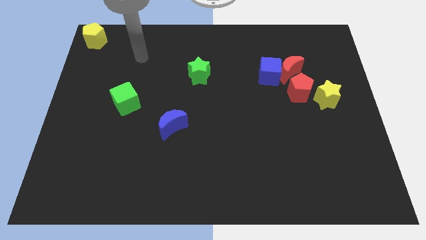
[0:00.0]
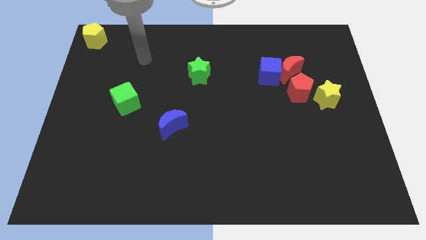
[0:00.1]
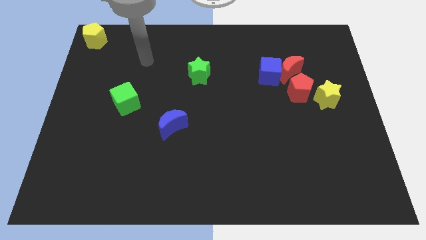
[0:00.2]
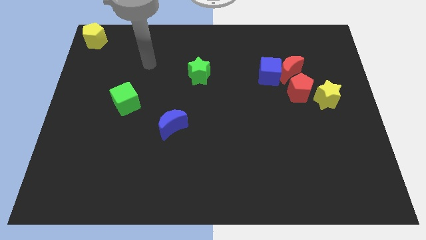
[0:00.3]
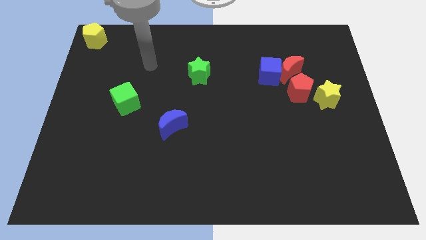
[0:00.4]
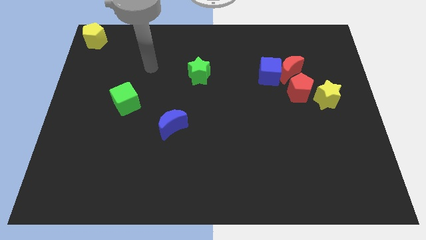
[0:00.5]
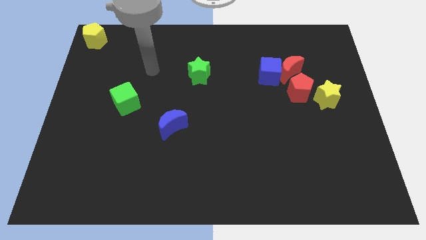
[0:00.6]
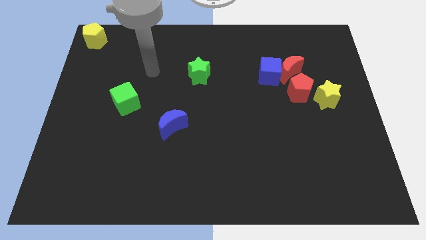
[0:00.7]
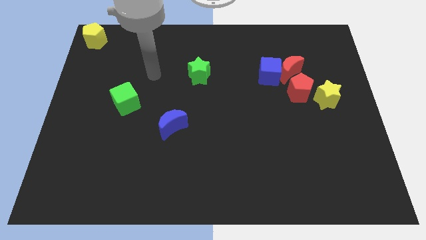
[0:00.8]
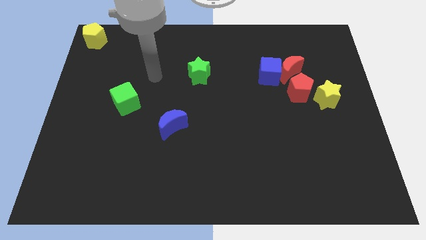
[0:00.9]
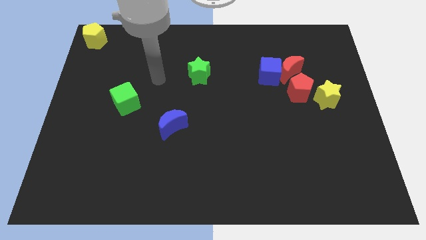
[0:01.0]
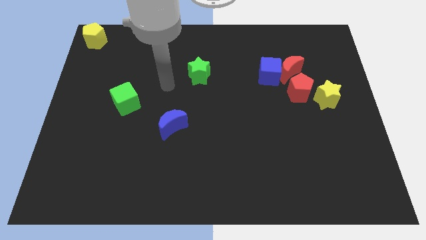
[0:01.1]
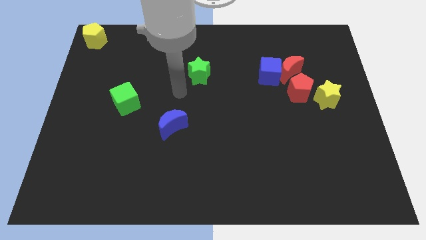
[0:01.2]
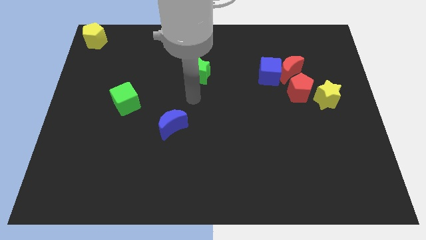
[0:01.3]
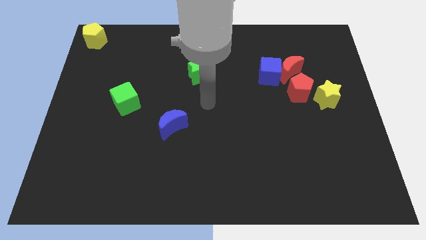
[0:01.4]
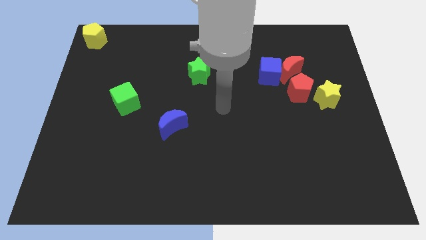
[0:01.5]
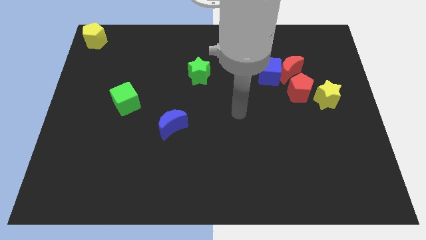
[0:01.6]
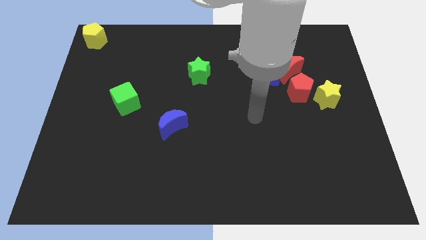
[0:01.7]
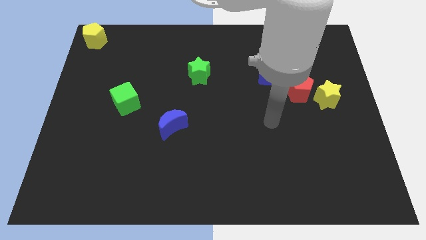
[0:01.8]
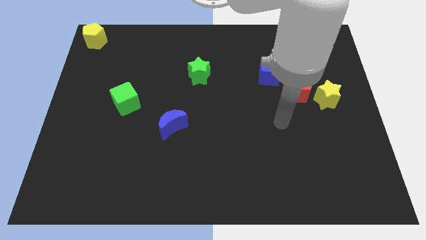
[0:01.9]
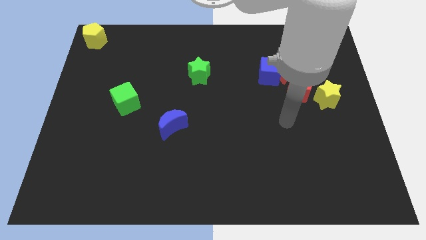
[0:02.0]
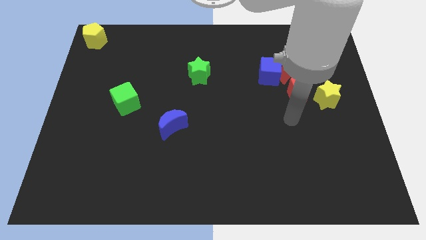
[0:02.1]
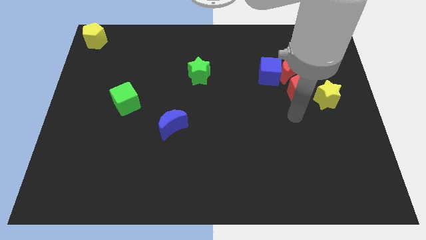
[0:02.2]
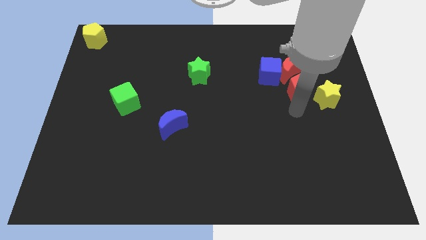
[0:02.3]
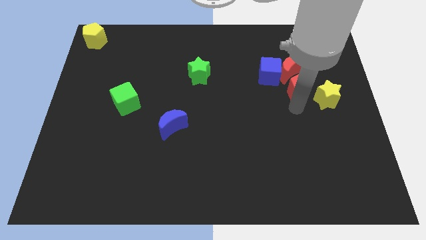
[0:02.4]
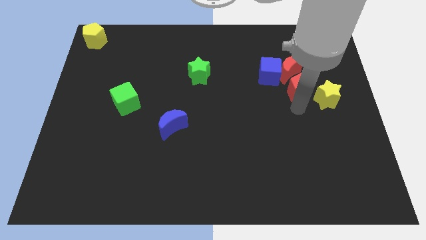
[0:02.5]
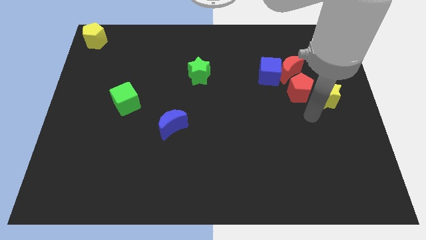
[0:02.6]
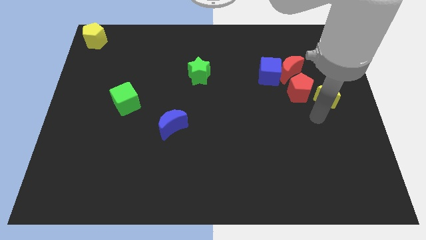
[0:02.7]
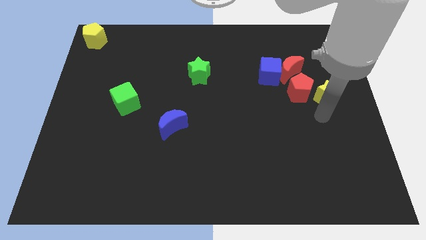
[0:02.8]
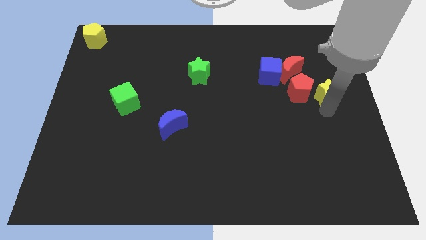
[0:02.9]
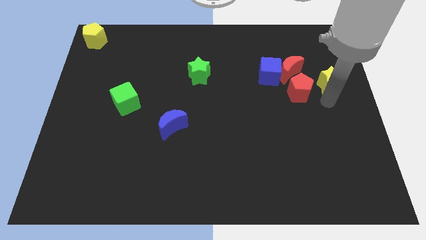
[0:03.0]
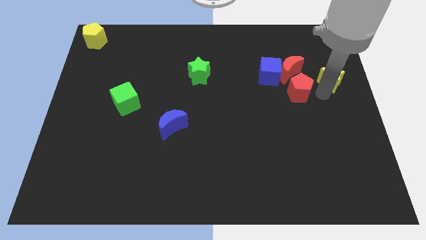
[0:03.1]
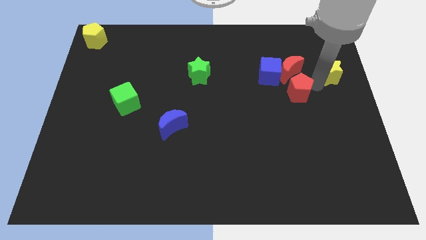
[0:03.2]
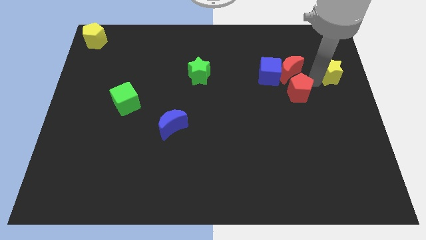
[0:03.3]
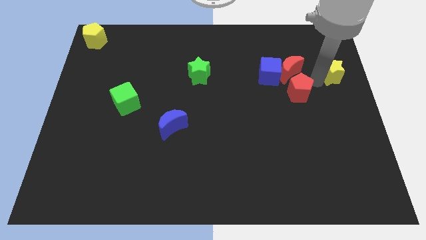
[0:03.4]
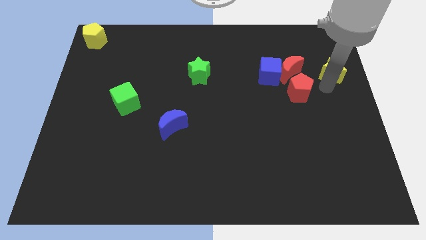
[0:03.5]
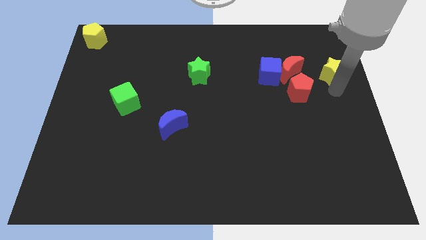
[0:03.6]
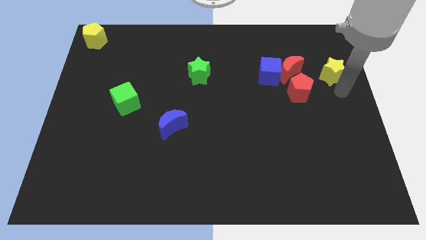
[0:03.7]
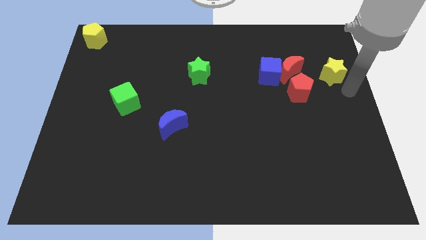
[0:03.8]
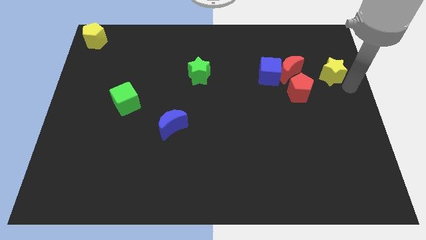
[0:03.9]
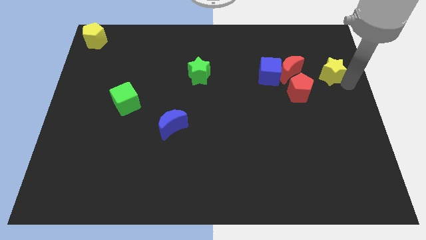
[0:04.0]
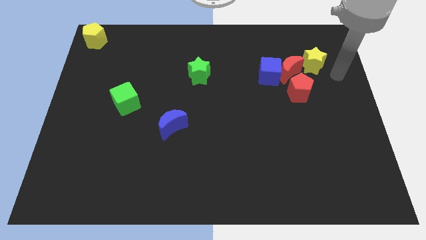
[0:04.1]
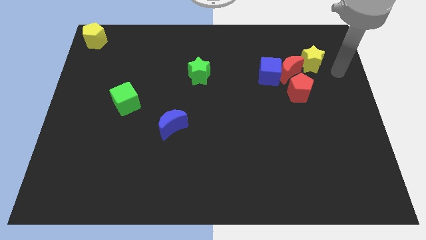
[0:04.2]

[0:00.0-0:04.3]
place the yellow star to top right of red moon

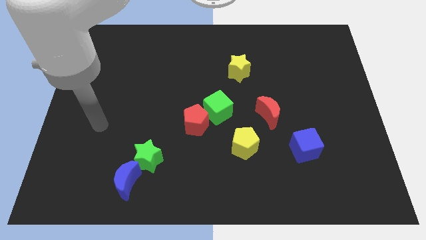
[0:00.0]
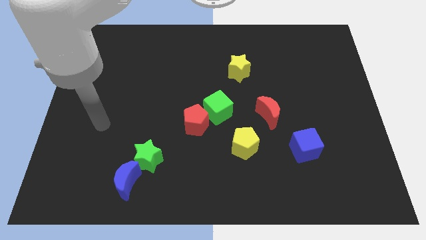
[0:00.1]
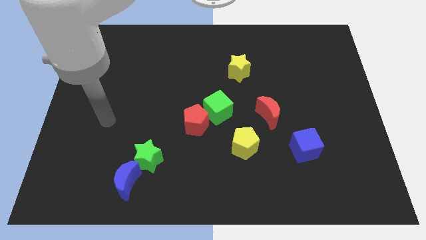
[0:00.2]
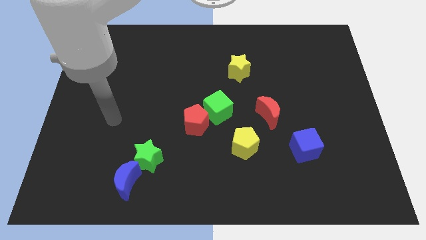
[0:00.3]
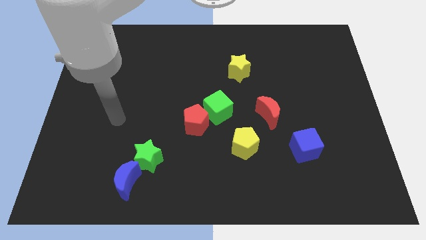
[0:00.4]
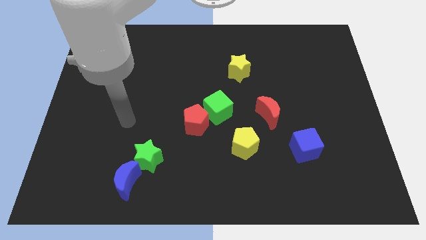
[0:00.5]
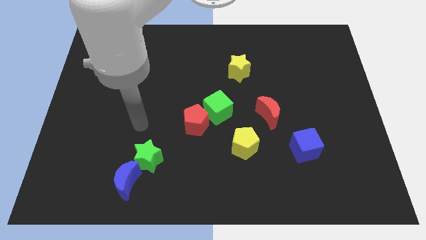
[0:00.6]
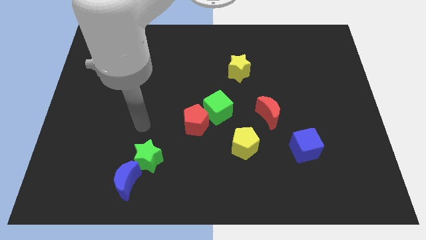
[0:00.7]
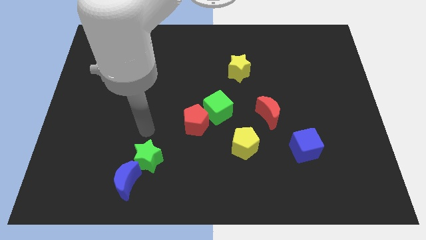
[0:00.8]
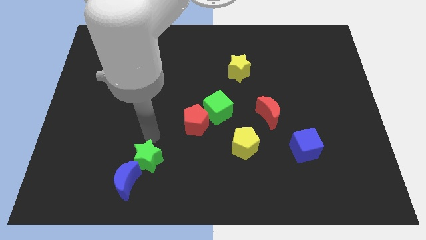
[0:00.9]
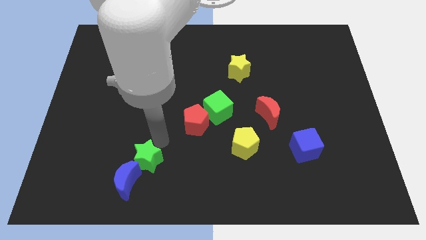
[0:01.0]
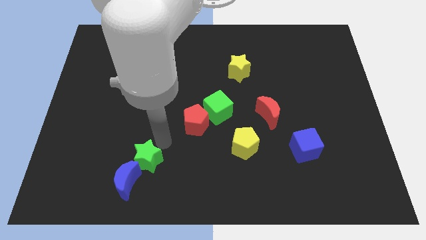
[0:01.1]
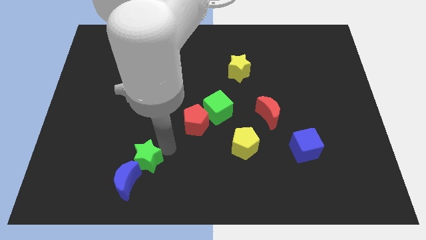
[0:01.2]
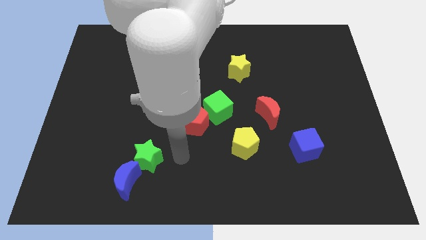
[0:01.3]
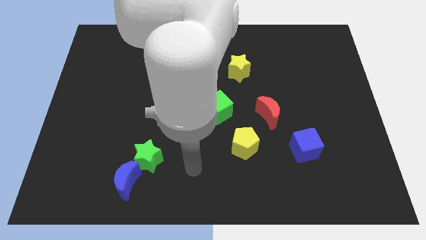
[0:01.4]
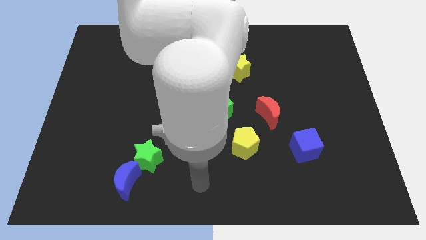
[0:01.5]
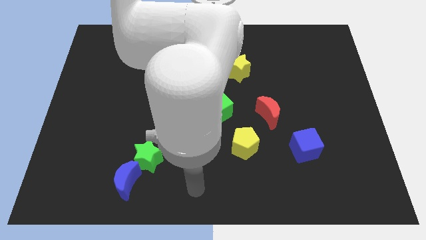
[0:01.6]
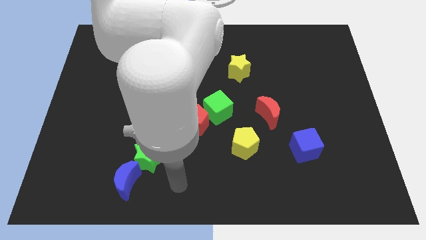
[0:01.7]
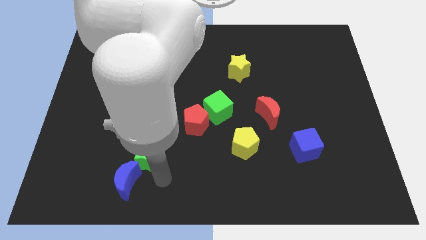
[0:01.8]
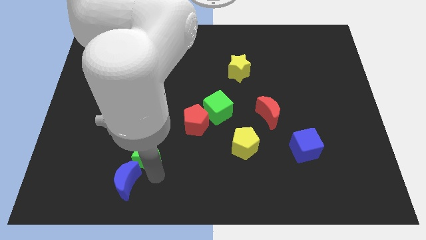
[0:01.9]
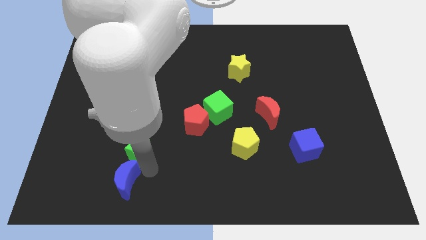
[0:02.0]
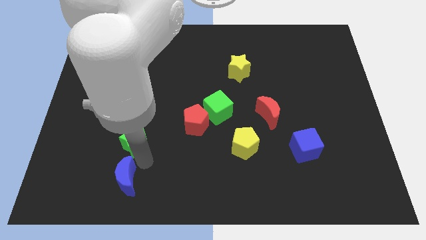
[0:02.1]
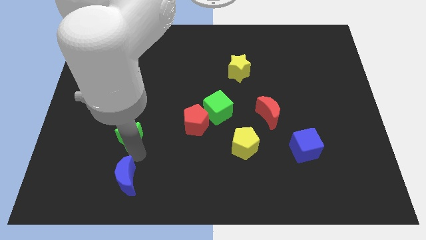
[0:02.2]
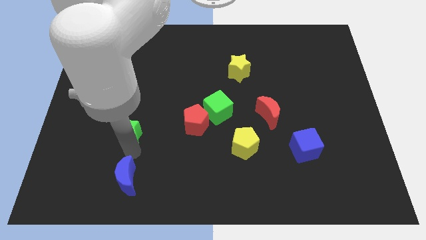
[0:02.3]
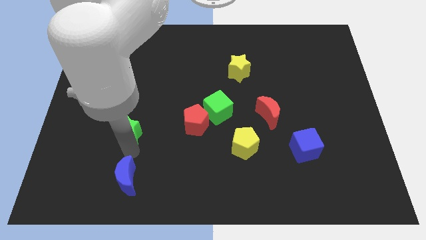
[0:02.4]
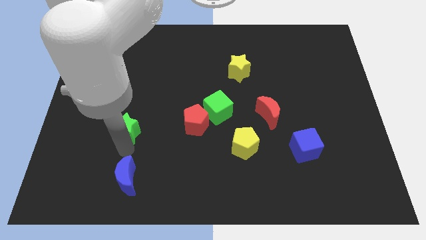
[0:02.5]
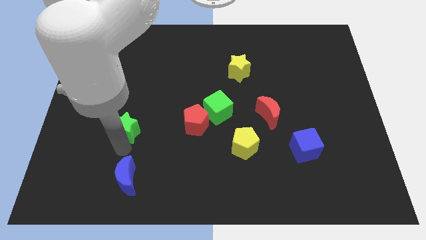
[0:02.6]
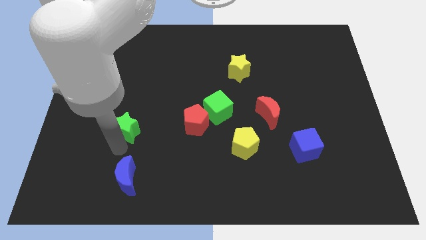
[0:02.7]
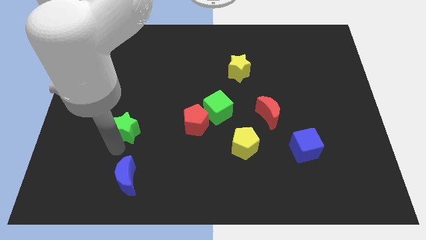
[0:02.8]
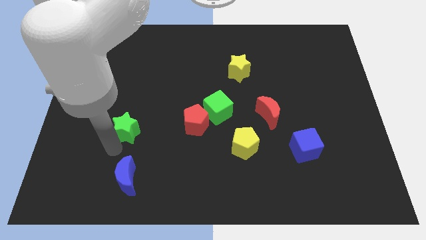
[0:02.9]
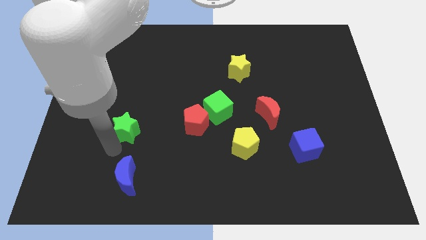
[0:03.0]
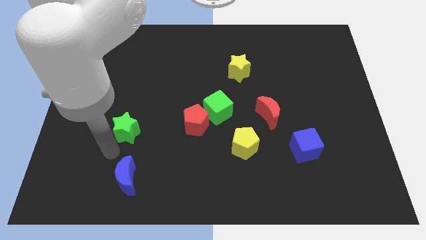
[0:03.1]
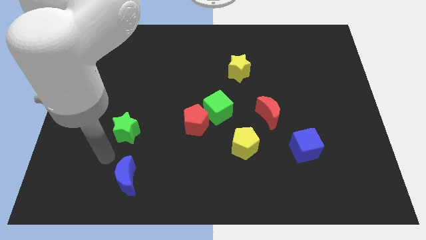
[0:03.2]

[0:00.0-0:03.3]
separate the green star from the blue moon

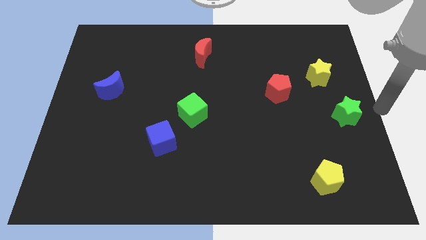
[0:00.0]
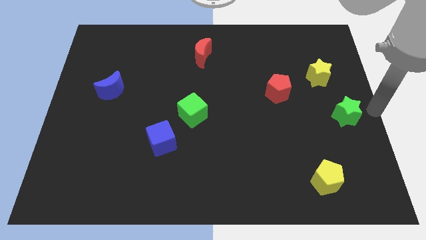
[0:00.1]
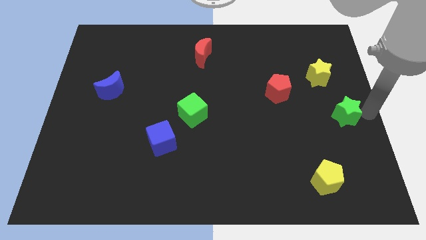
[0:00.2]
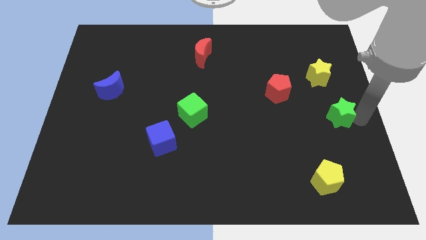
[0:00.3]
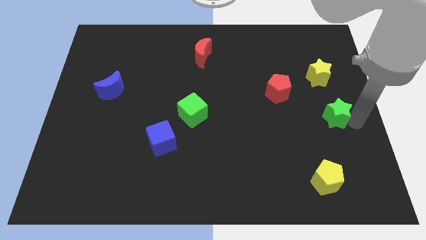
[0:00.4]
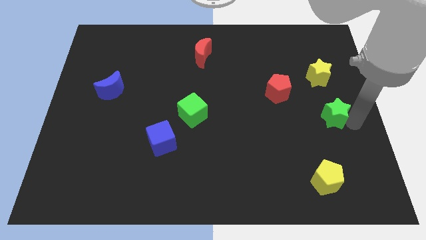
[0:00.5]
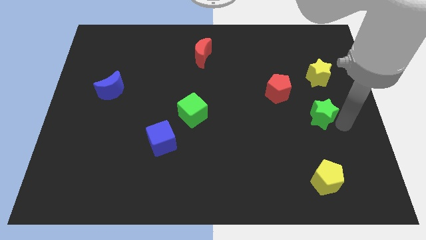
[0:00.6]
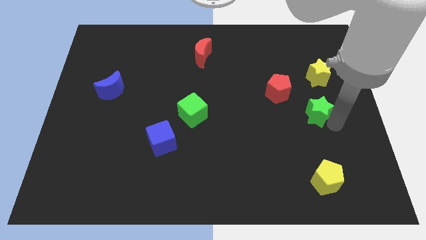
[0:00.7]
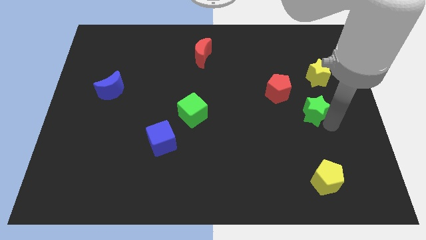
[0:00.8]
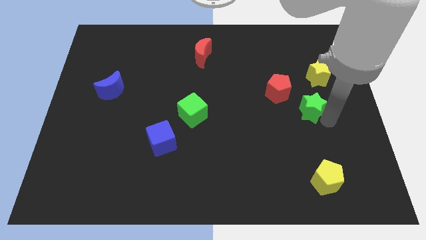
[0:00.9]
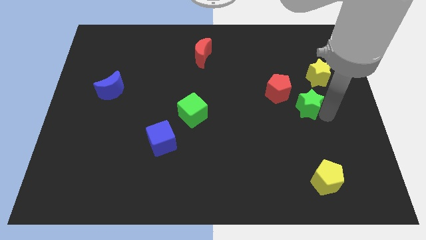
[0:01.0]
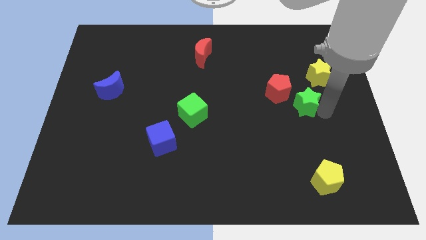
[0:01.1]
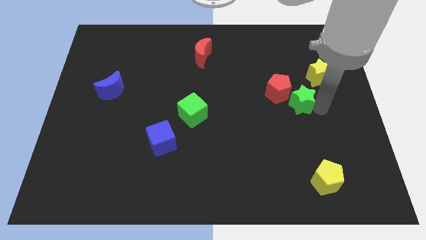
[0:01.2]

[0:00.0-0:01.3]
place the green star to the center

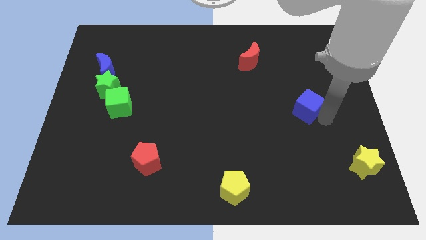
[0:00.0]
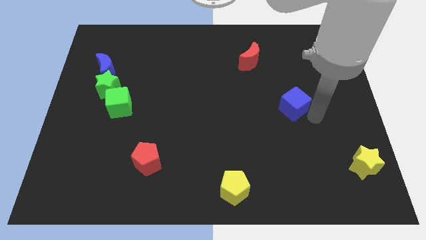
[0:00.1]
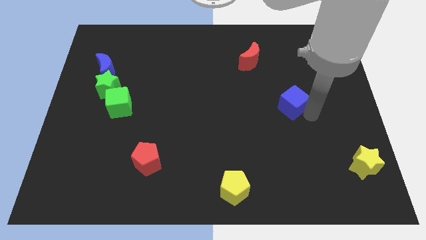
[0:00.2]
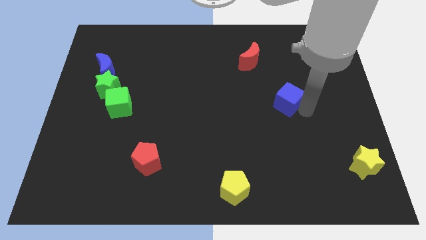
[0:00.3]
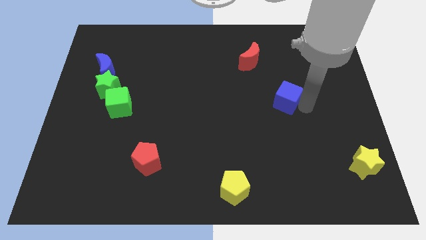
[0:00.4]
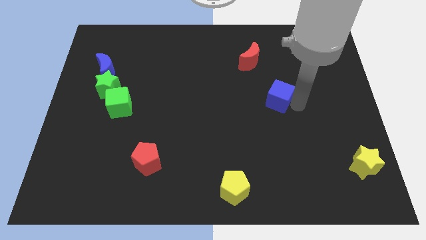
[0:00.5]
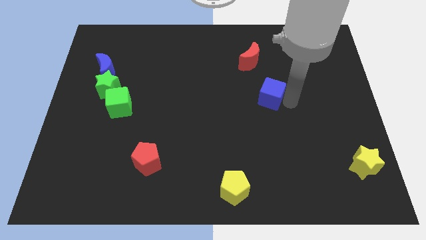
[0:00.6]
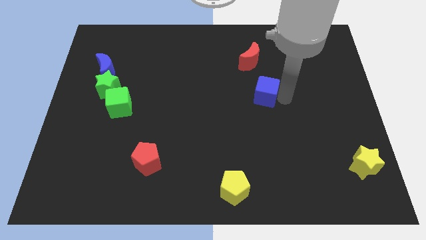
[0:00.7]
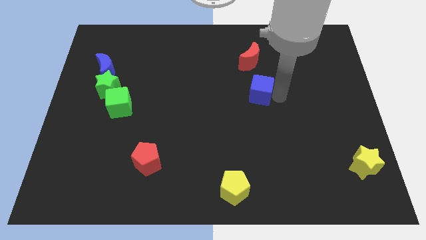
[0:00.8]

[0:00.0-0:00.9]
place the blue cube vertically below the red crescent
